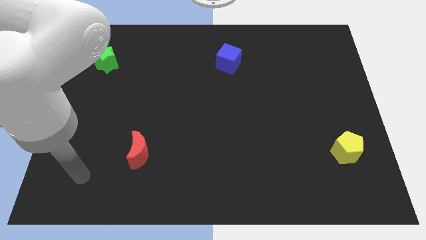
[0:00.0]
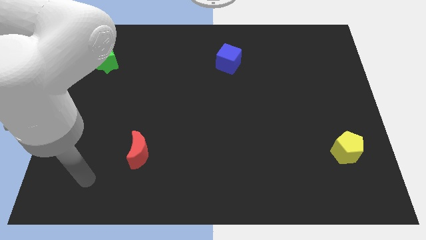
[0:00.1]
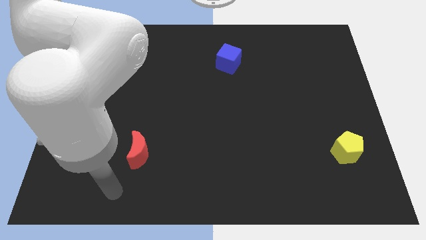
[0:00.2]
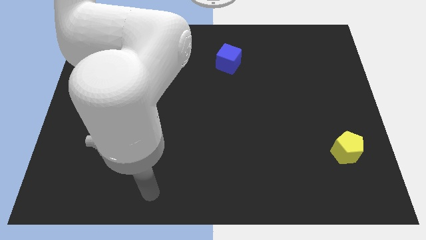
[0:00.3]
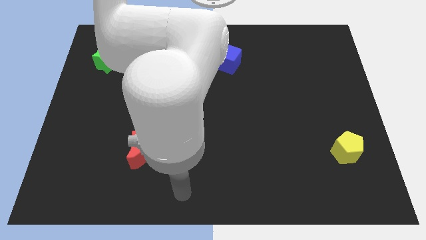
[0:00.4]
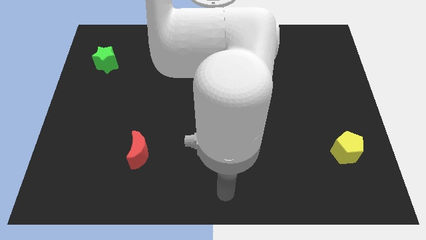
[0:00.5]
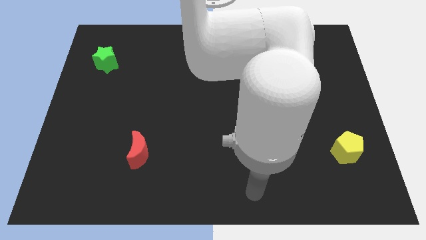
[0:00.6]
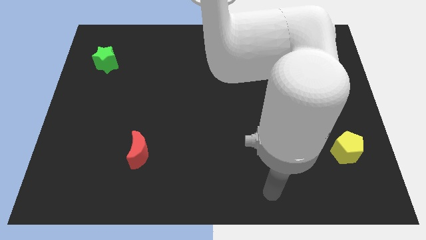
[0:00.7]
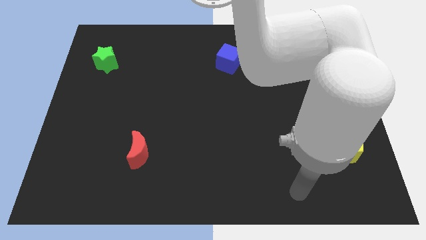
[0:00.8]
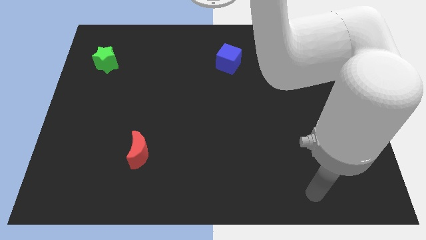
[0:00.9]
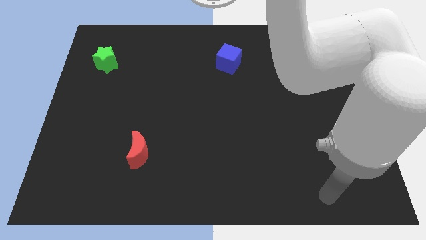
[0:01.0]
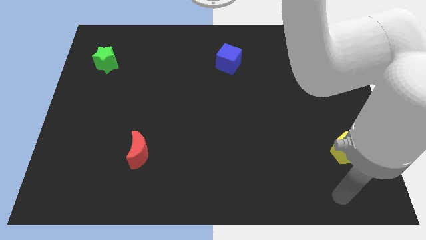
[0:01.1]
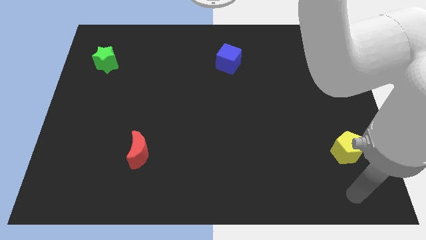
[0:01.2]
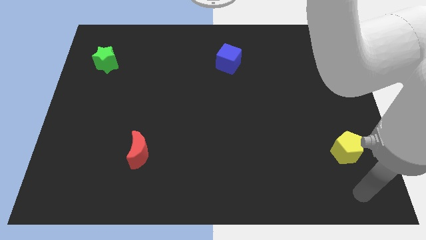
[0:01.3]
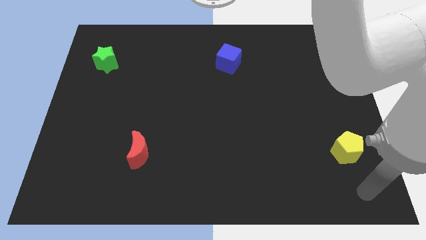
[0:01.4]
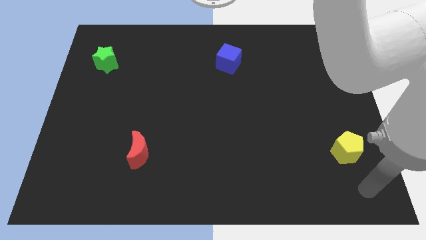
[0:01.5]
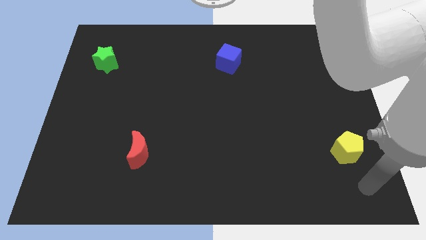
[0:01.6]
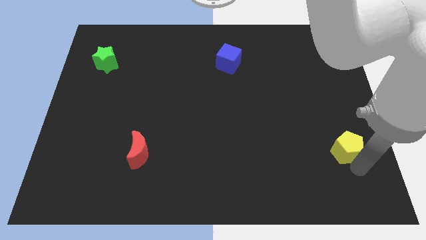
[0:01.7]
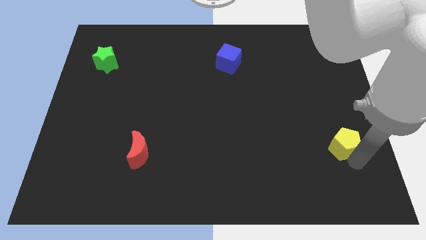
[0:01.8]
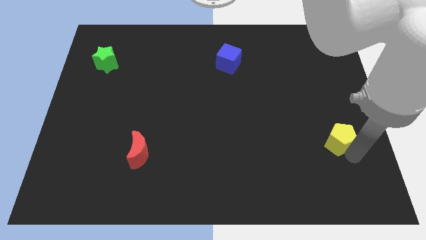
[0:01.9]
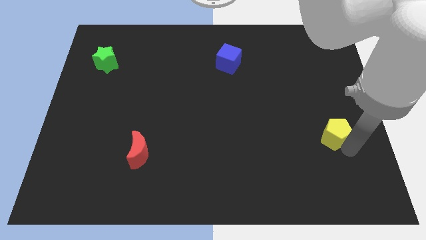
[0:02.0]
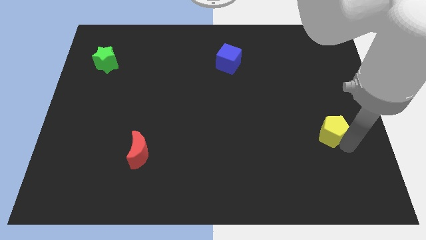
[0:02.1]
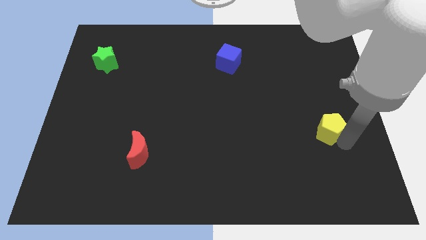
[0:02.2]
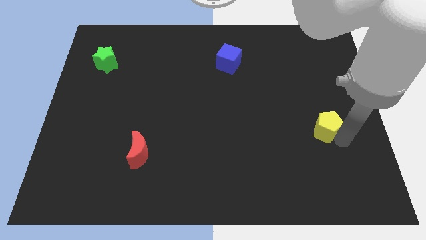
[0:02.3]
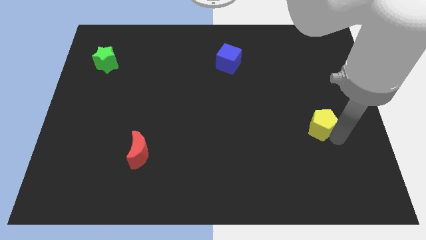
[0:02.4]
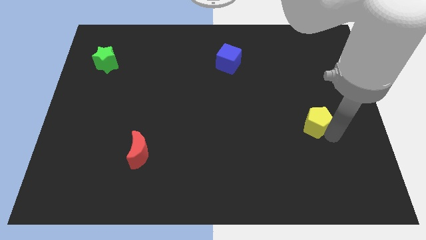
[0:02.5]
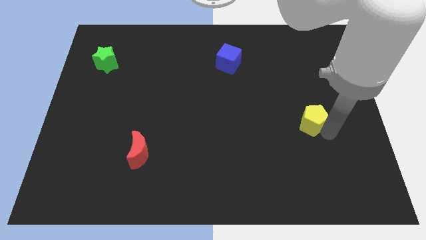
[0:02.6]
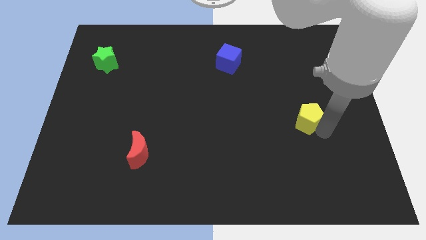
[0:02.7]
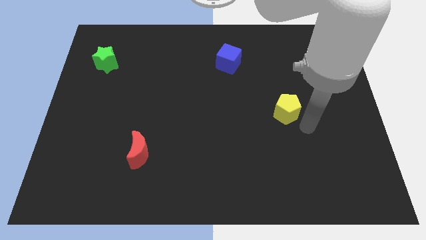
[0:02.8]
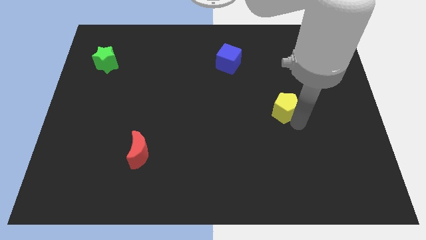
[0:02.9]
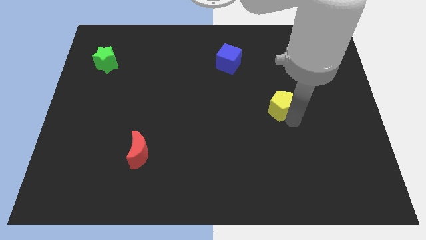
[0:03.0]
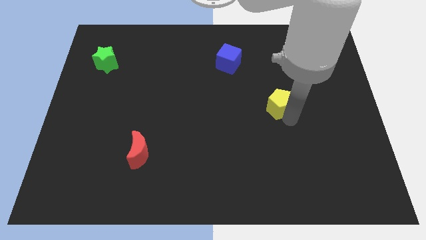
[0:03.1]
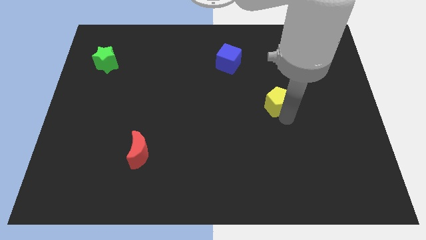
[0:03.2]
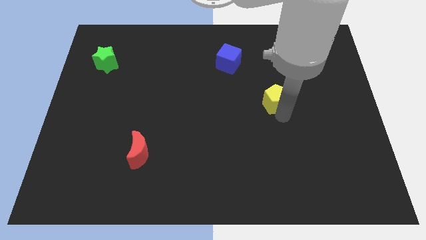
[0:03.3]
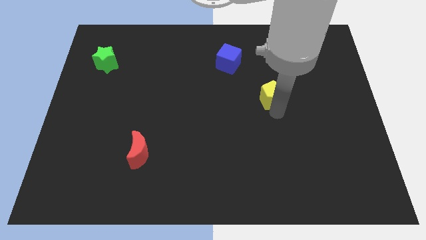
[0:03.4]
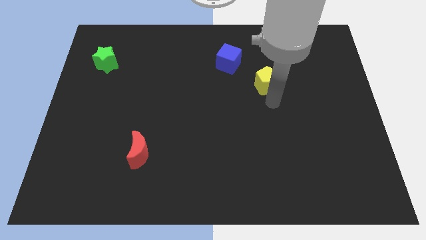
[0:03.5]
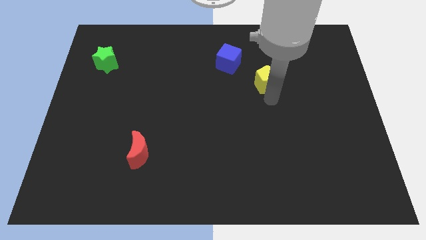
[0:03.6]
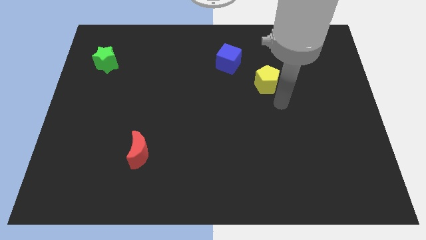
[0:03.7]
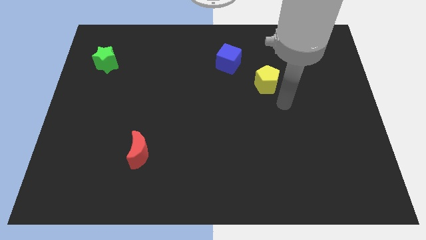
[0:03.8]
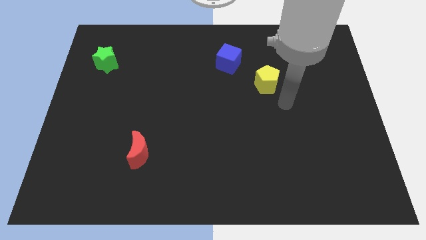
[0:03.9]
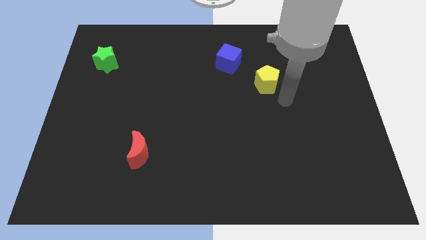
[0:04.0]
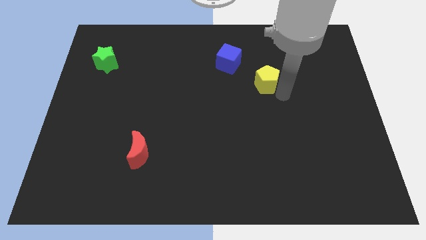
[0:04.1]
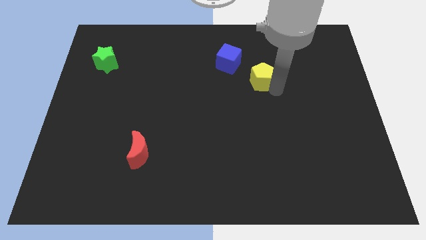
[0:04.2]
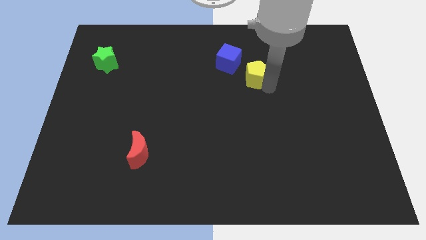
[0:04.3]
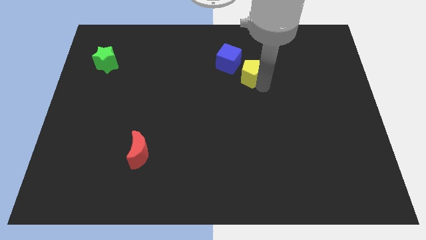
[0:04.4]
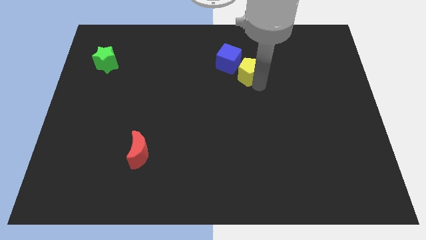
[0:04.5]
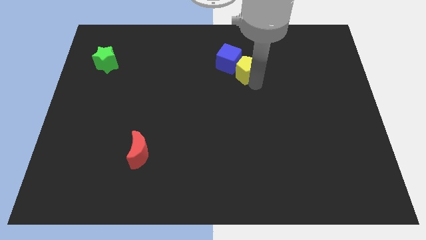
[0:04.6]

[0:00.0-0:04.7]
put the yellow block to the blue cube

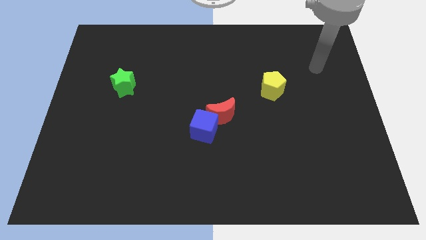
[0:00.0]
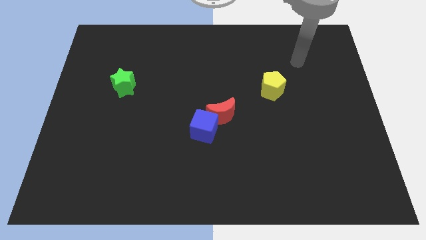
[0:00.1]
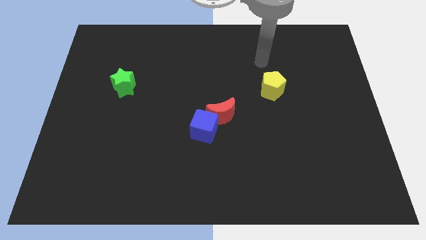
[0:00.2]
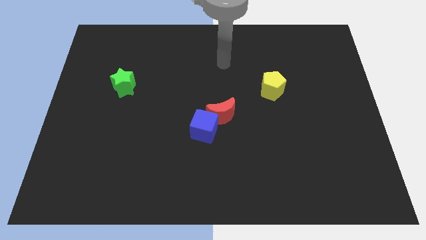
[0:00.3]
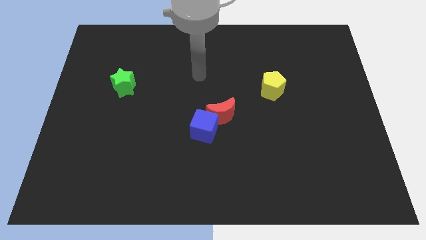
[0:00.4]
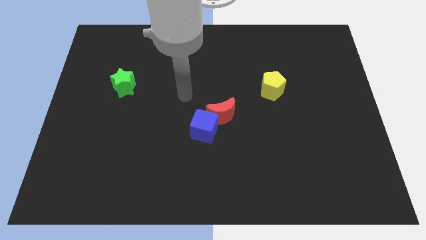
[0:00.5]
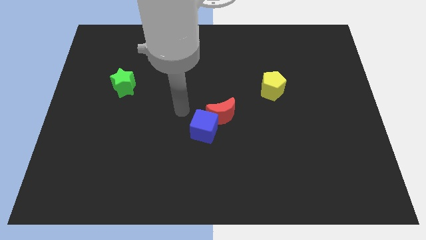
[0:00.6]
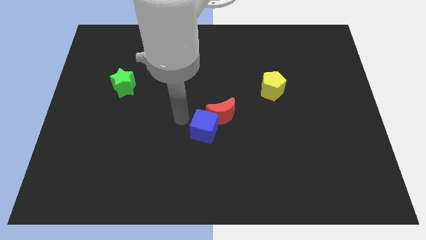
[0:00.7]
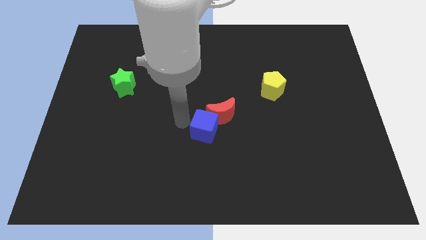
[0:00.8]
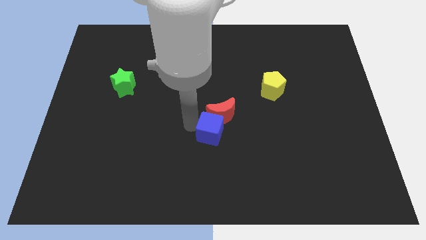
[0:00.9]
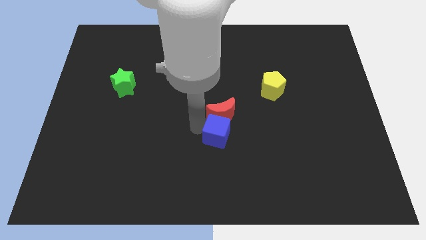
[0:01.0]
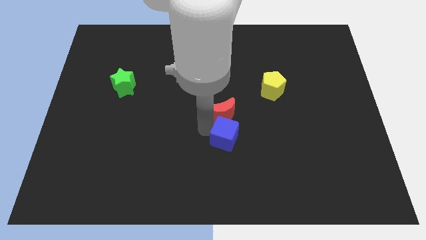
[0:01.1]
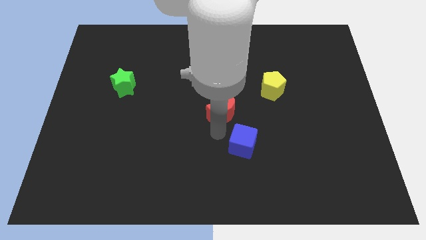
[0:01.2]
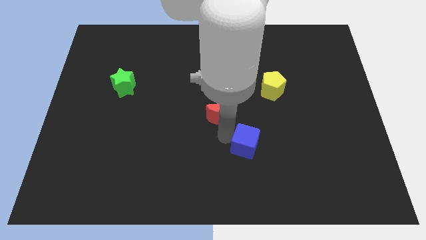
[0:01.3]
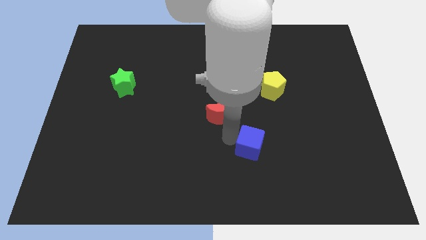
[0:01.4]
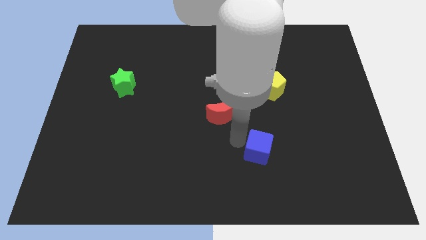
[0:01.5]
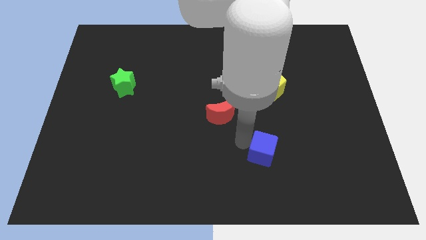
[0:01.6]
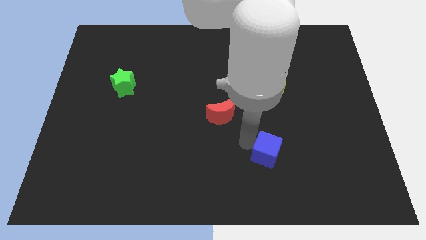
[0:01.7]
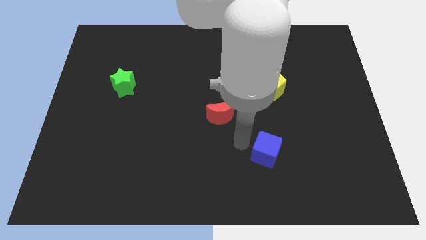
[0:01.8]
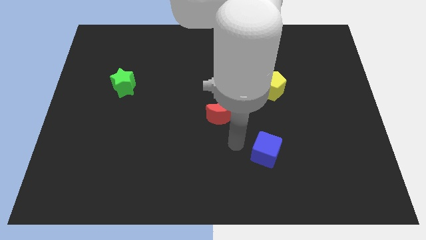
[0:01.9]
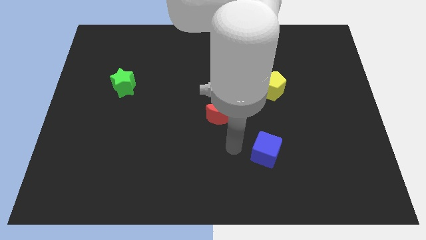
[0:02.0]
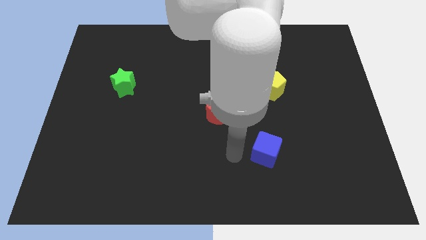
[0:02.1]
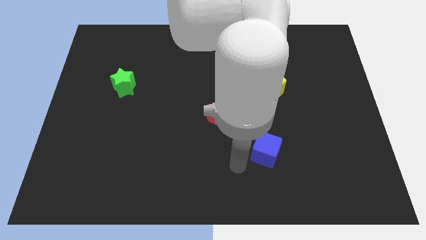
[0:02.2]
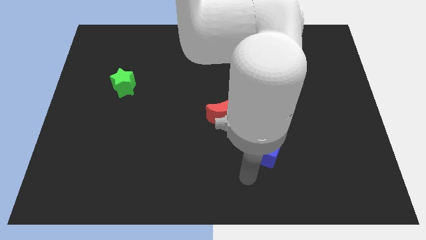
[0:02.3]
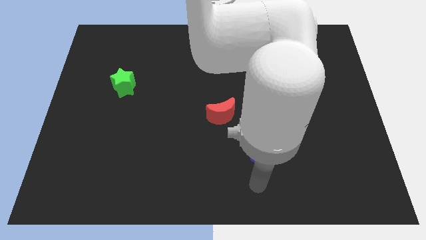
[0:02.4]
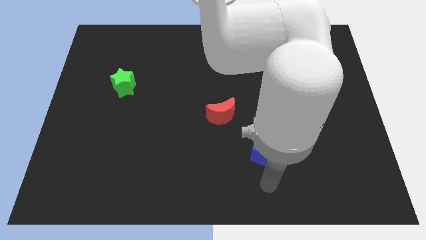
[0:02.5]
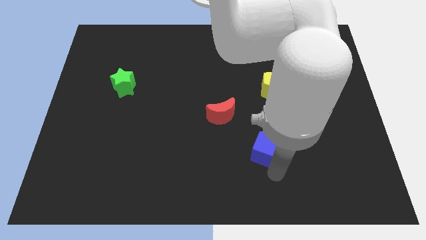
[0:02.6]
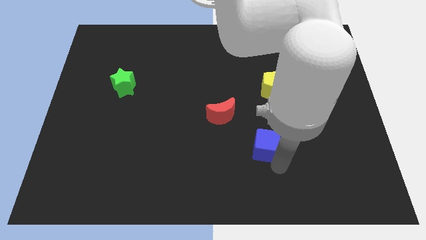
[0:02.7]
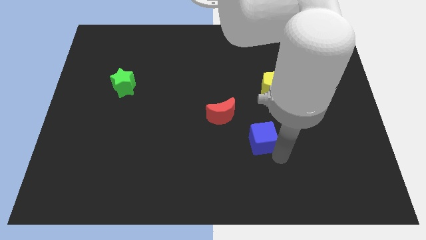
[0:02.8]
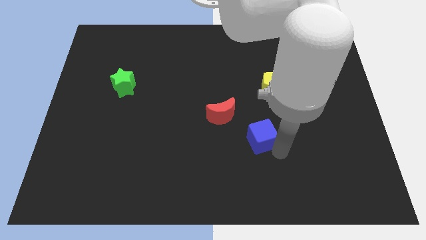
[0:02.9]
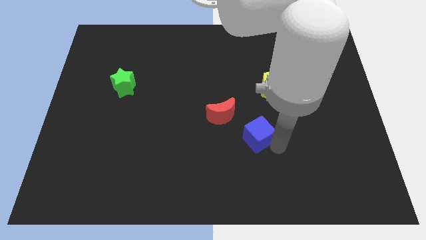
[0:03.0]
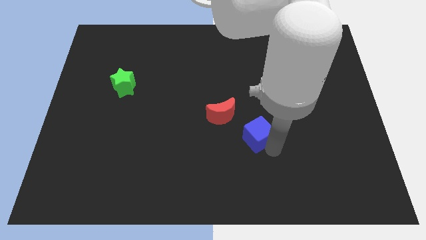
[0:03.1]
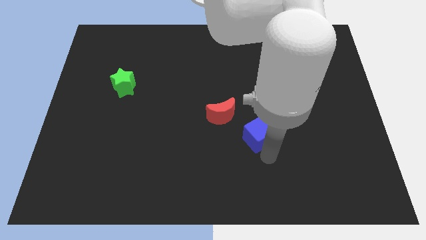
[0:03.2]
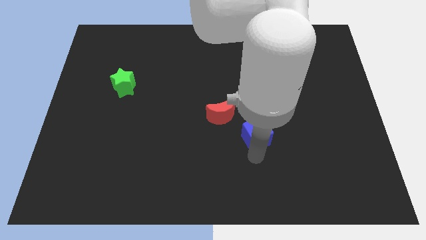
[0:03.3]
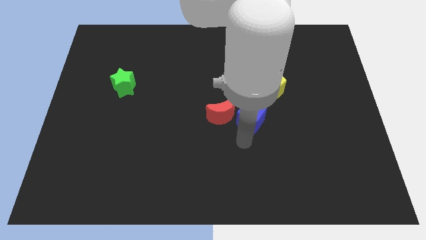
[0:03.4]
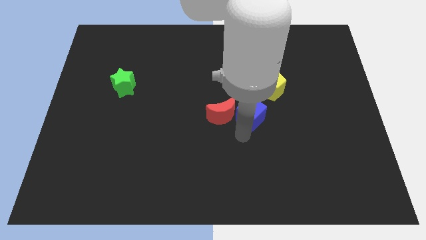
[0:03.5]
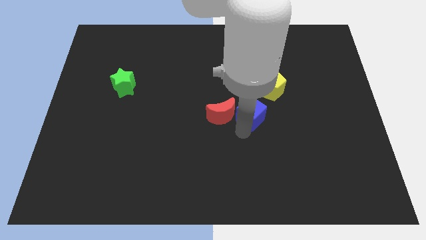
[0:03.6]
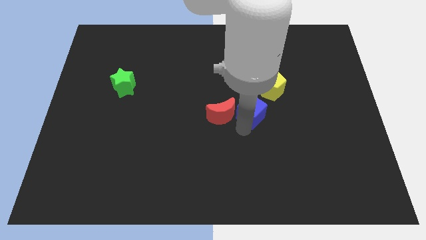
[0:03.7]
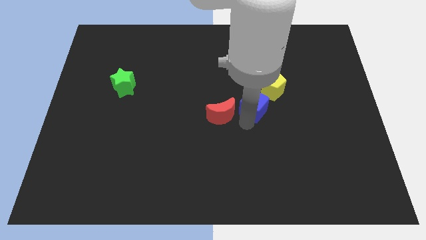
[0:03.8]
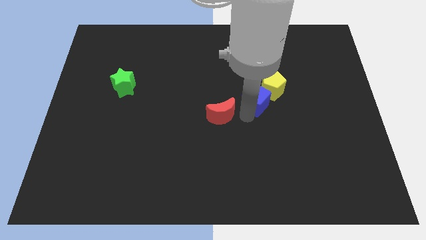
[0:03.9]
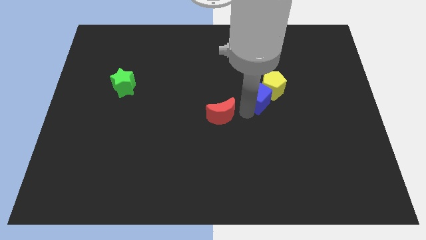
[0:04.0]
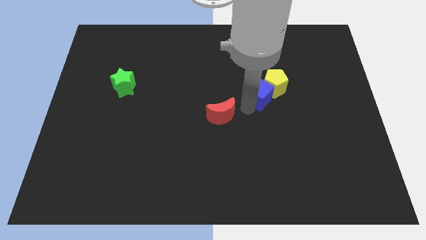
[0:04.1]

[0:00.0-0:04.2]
push the cube towards the yellow block
